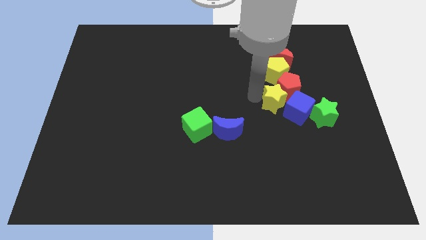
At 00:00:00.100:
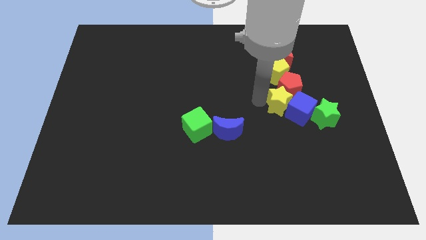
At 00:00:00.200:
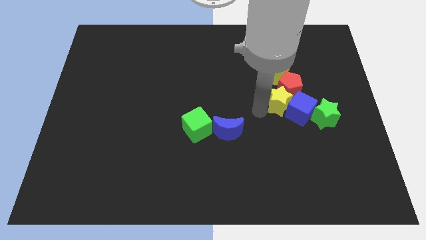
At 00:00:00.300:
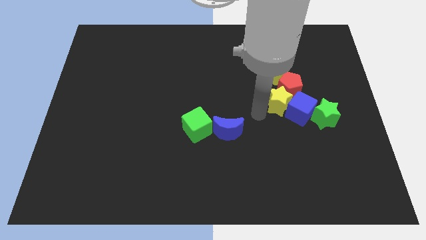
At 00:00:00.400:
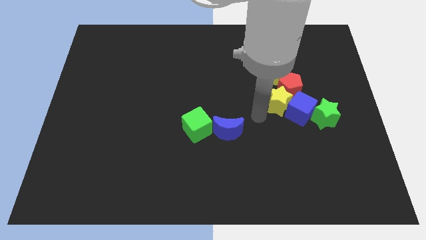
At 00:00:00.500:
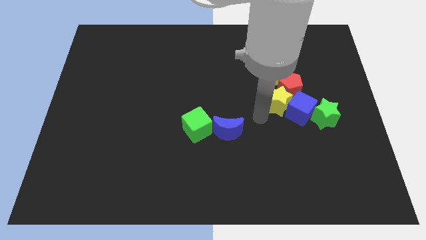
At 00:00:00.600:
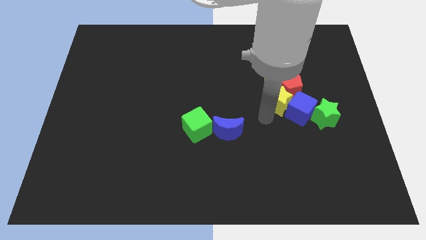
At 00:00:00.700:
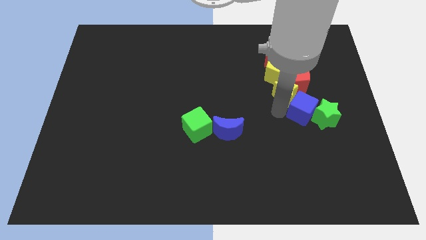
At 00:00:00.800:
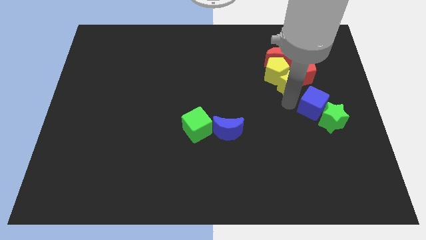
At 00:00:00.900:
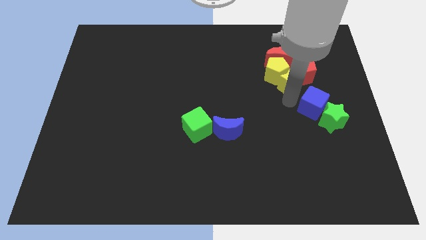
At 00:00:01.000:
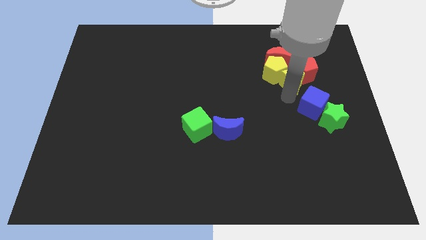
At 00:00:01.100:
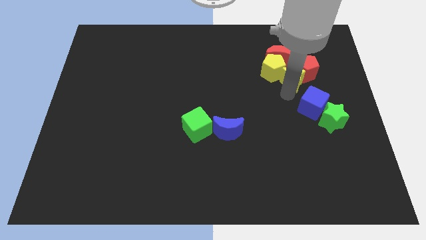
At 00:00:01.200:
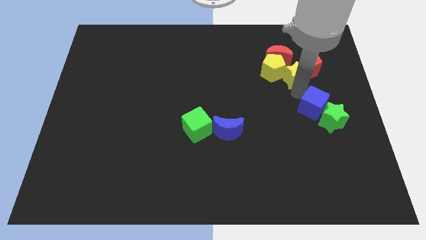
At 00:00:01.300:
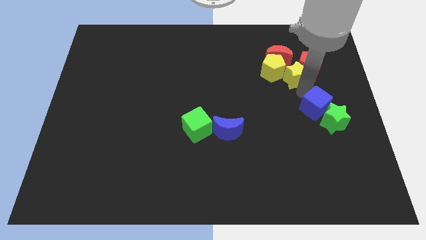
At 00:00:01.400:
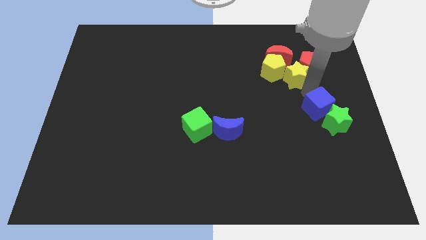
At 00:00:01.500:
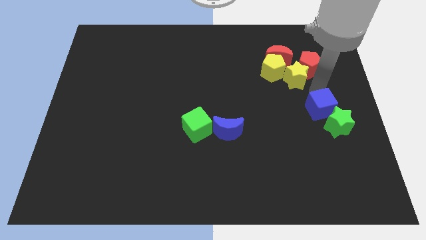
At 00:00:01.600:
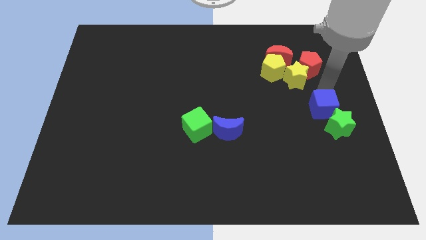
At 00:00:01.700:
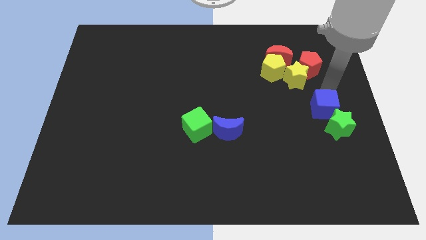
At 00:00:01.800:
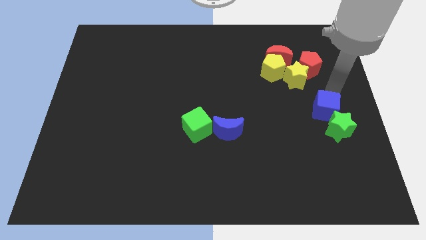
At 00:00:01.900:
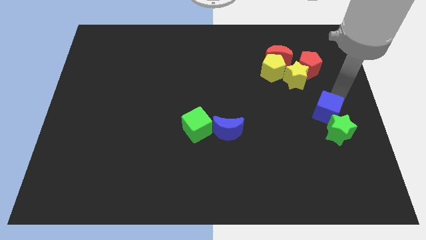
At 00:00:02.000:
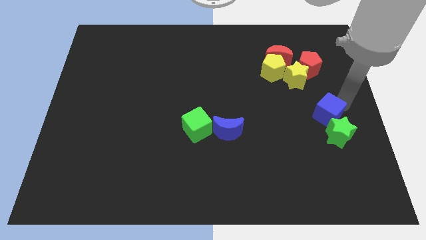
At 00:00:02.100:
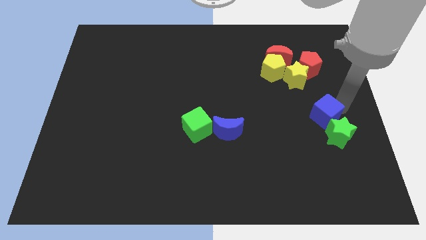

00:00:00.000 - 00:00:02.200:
put the yellow star and the red pentagon towards the top right of the board slightly

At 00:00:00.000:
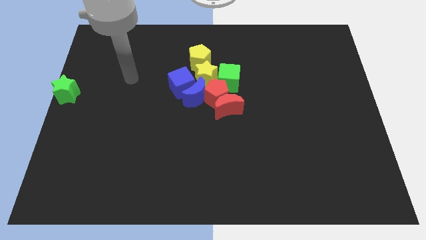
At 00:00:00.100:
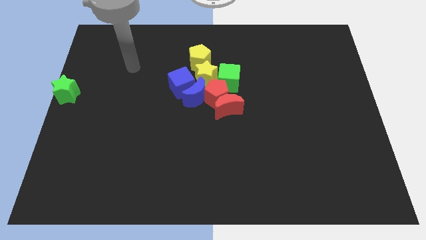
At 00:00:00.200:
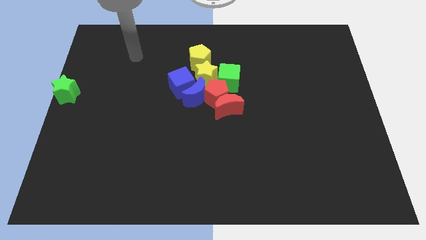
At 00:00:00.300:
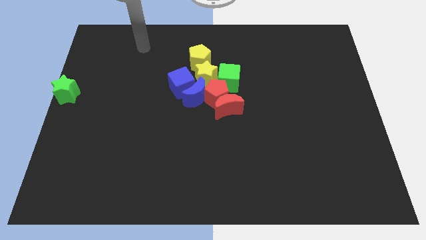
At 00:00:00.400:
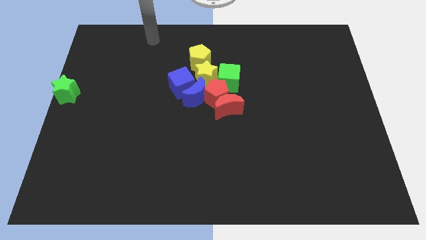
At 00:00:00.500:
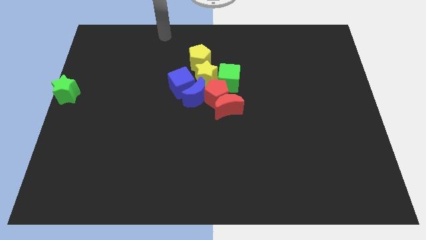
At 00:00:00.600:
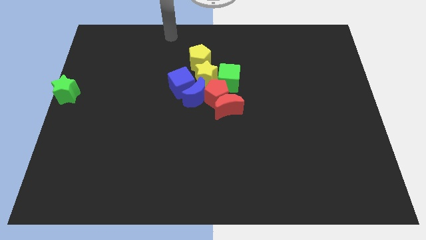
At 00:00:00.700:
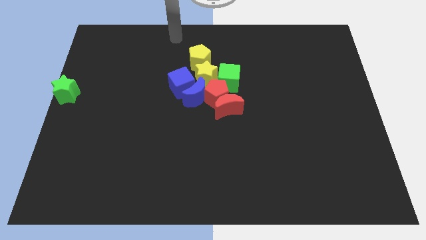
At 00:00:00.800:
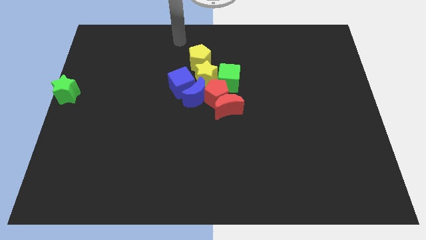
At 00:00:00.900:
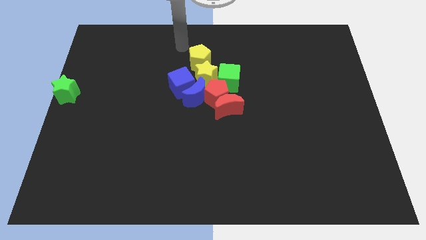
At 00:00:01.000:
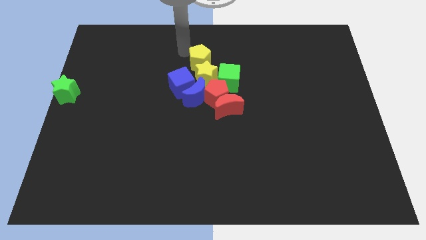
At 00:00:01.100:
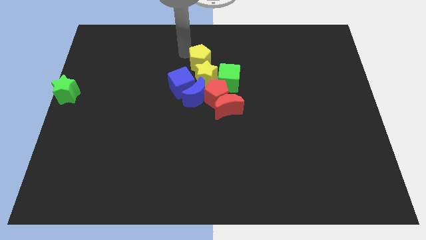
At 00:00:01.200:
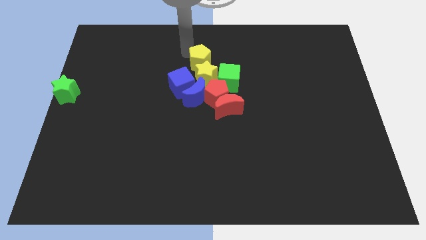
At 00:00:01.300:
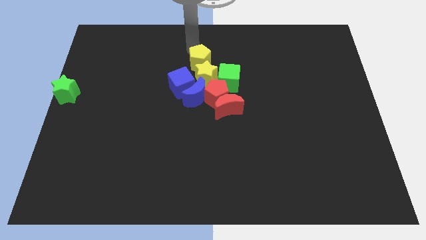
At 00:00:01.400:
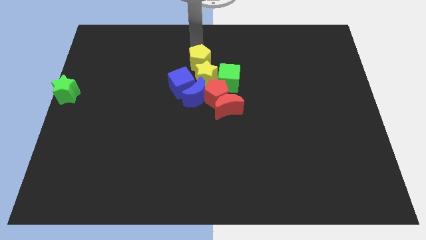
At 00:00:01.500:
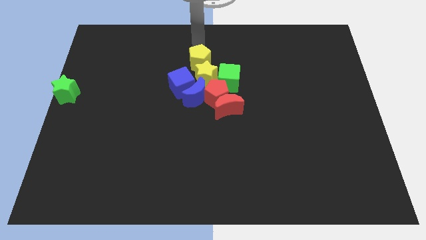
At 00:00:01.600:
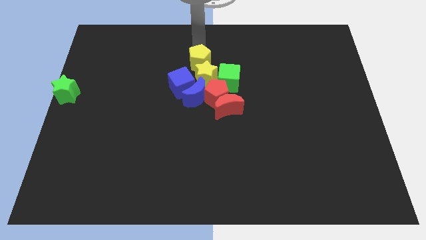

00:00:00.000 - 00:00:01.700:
point your arm at the top side of the yellow pentagon

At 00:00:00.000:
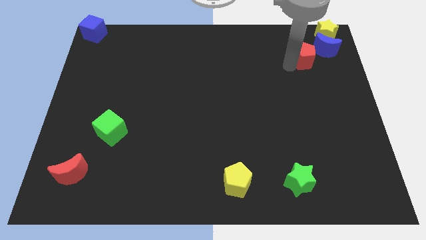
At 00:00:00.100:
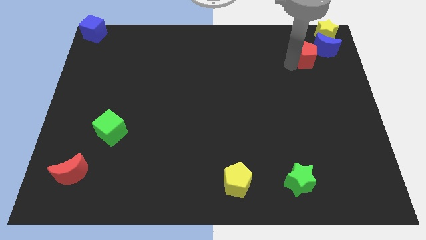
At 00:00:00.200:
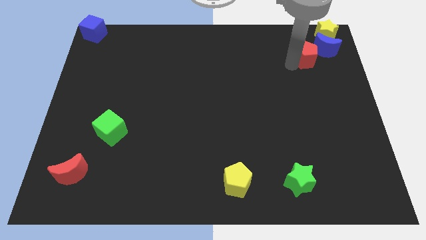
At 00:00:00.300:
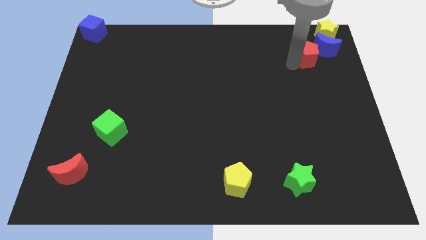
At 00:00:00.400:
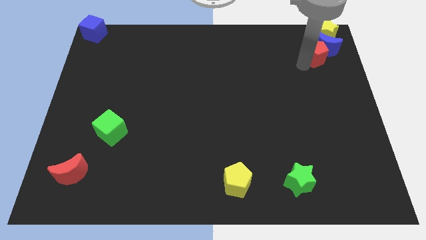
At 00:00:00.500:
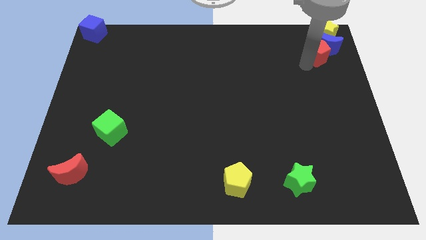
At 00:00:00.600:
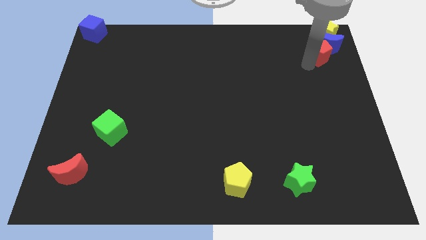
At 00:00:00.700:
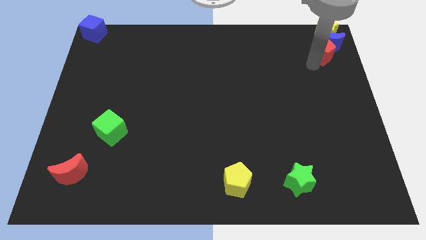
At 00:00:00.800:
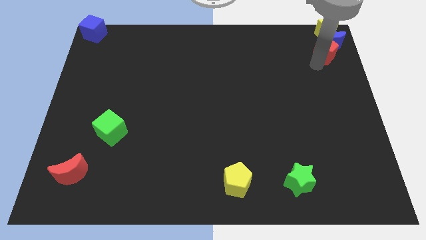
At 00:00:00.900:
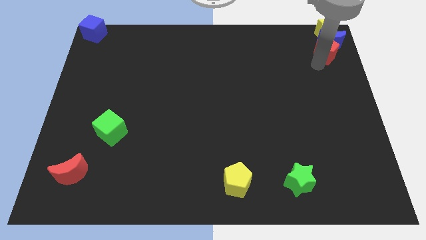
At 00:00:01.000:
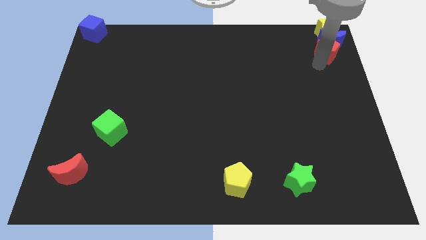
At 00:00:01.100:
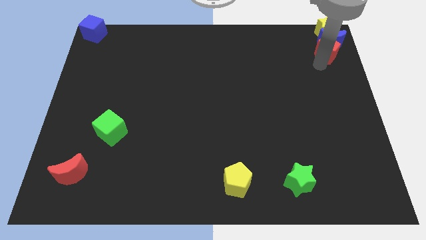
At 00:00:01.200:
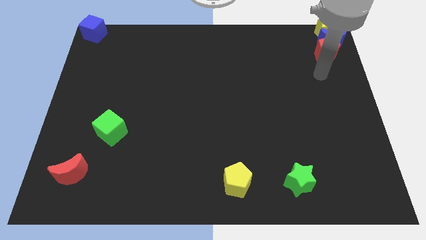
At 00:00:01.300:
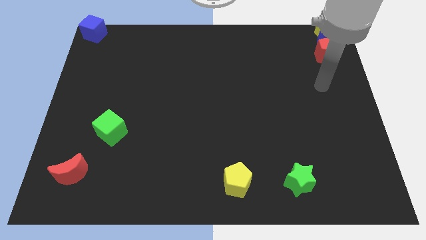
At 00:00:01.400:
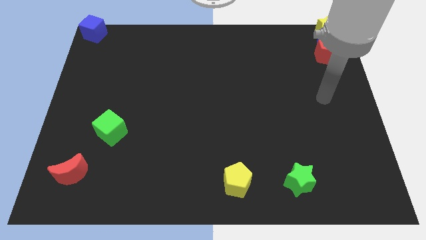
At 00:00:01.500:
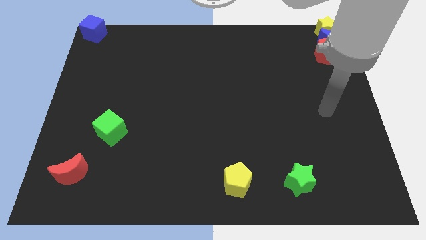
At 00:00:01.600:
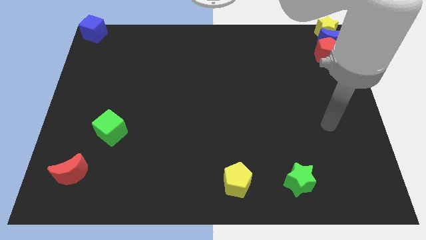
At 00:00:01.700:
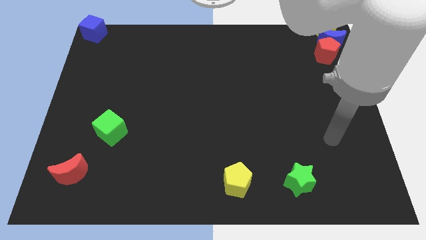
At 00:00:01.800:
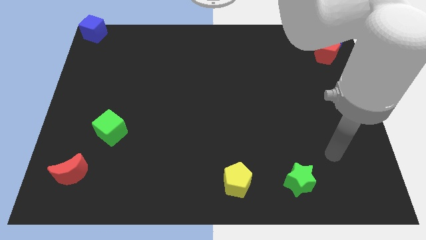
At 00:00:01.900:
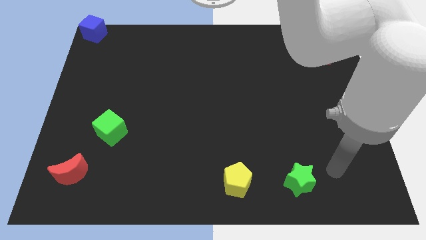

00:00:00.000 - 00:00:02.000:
push the red pentagon into the blue crescent

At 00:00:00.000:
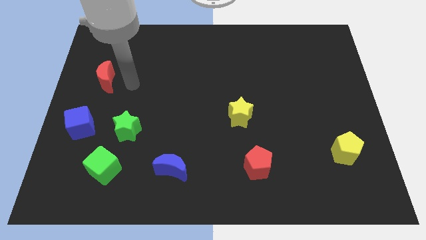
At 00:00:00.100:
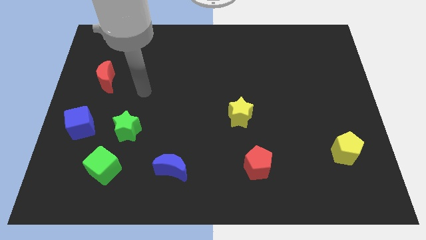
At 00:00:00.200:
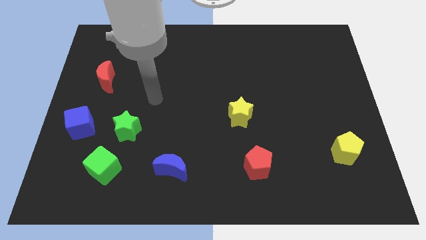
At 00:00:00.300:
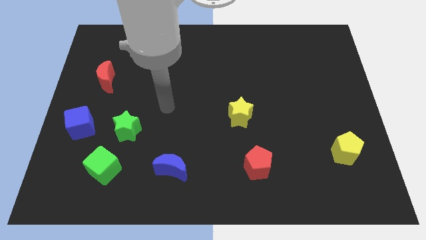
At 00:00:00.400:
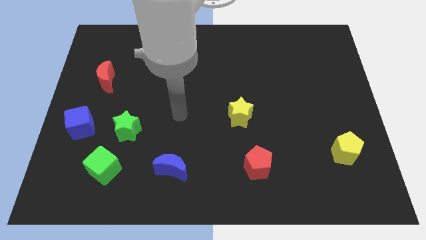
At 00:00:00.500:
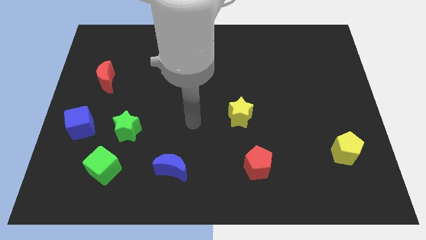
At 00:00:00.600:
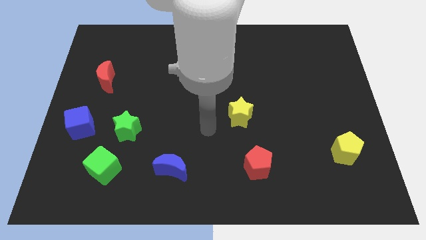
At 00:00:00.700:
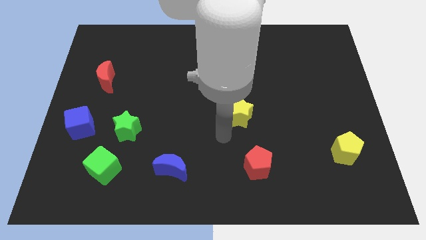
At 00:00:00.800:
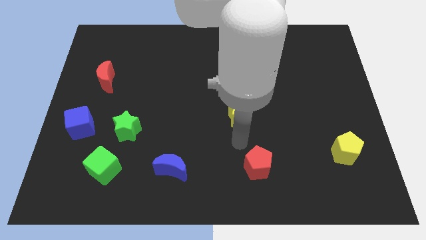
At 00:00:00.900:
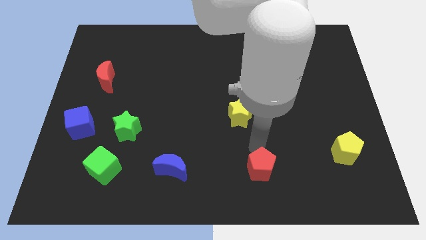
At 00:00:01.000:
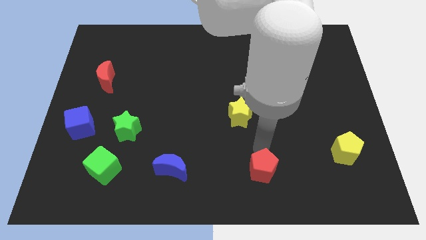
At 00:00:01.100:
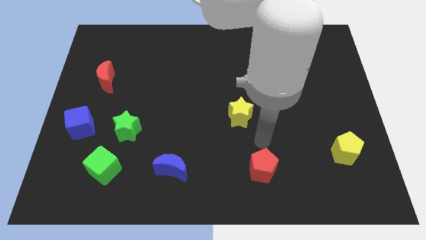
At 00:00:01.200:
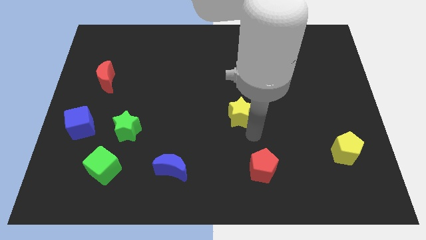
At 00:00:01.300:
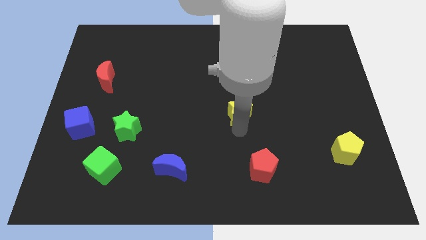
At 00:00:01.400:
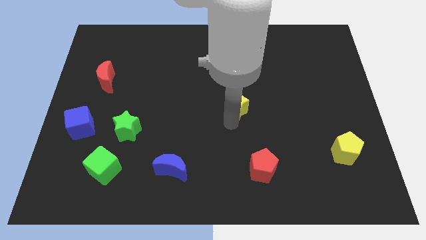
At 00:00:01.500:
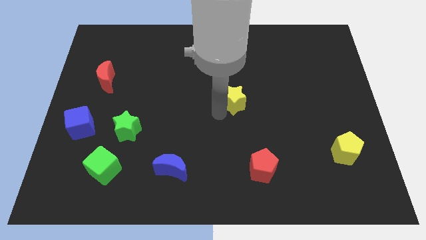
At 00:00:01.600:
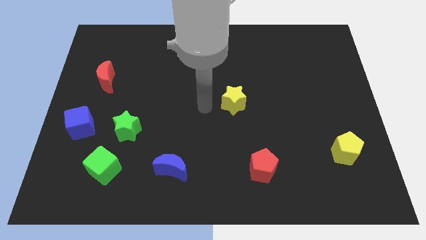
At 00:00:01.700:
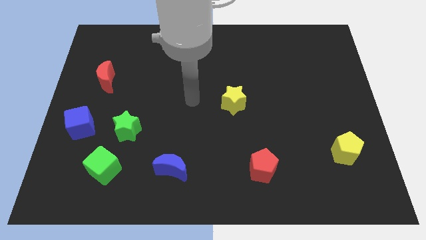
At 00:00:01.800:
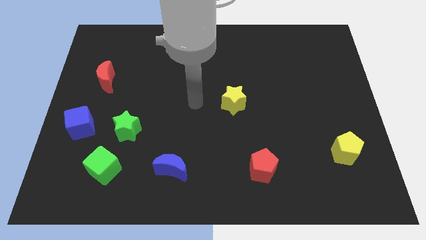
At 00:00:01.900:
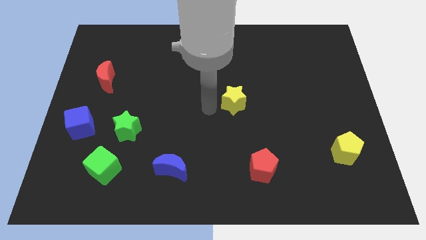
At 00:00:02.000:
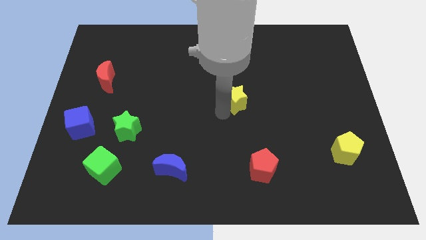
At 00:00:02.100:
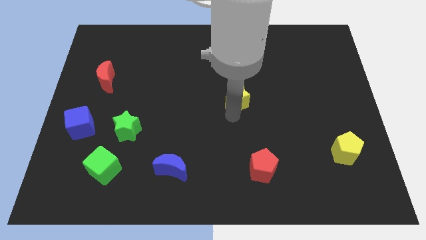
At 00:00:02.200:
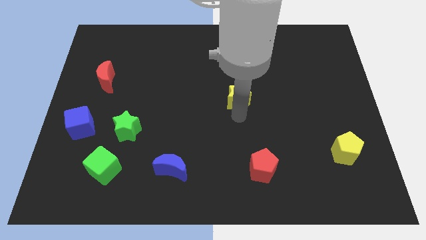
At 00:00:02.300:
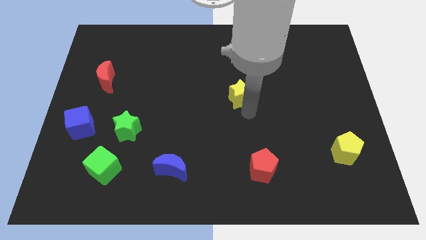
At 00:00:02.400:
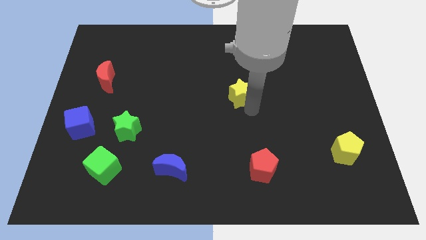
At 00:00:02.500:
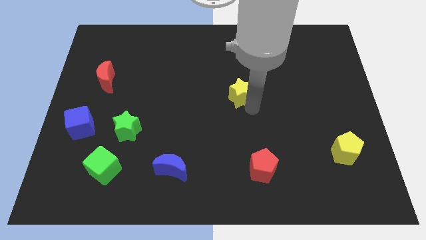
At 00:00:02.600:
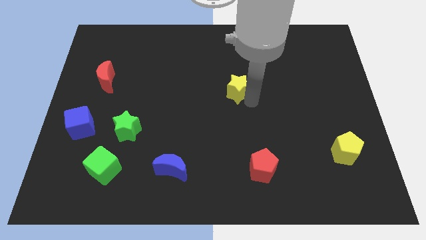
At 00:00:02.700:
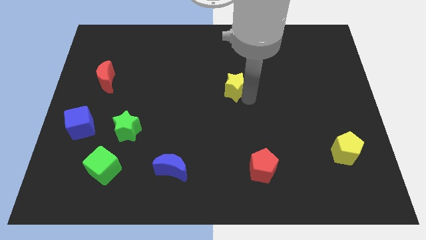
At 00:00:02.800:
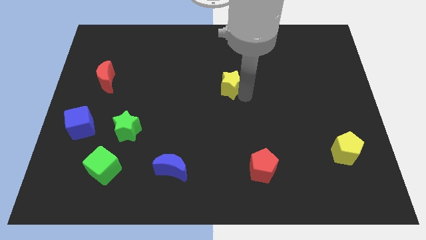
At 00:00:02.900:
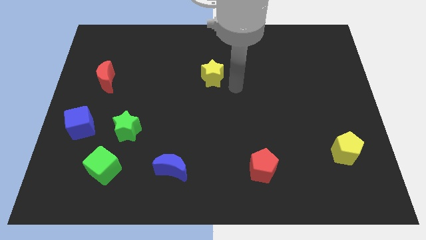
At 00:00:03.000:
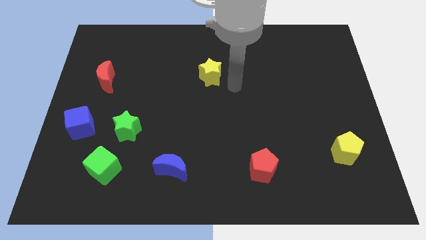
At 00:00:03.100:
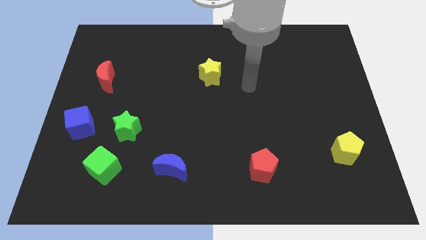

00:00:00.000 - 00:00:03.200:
push the yellow star towards the top side of the board
